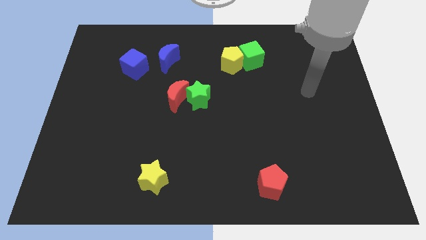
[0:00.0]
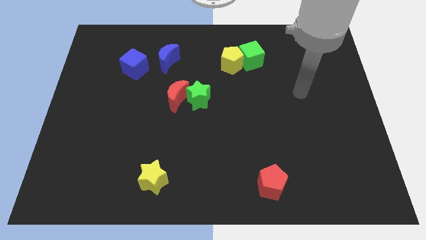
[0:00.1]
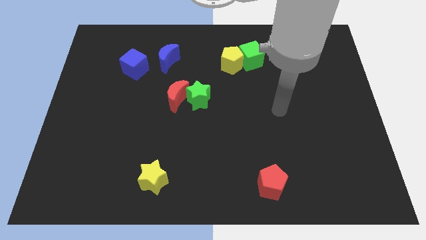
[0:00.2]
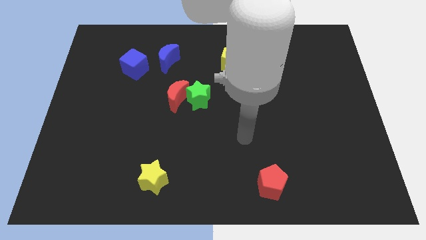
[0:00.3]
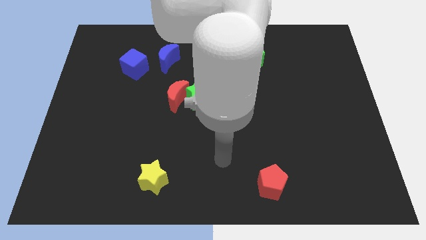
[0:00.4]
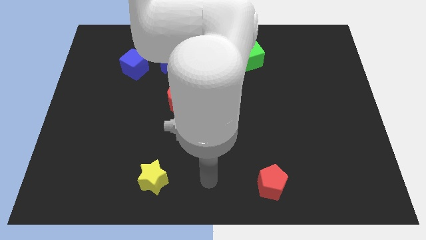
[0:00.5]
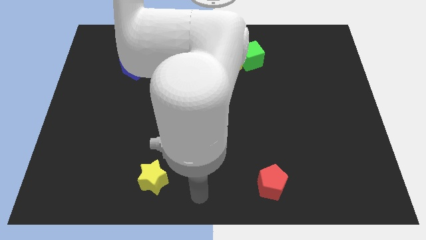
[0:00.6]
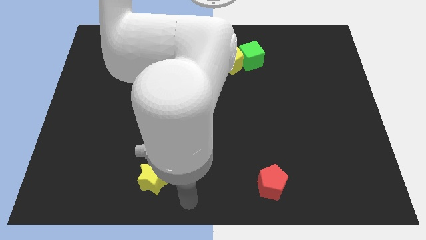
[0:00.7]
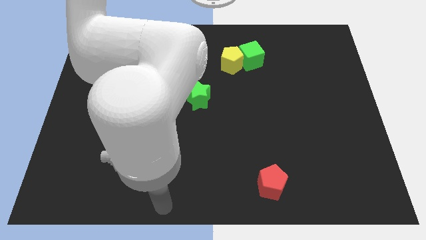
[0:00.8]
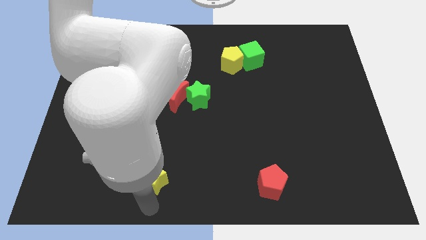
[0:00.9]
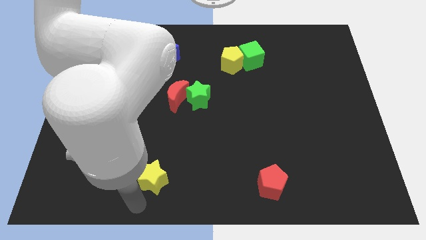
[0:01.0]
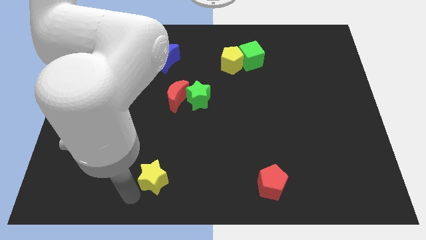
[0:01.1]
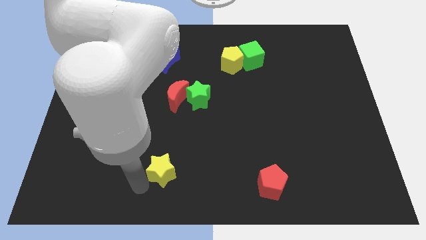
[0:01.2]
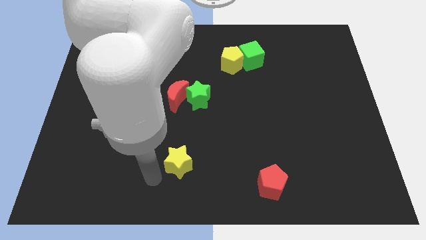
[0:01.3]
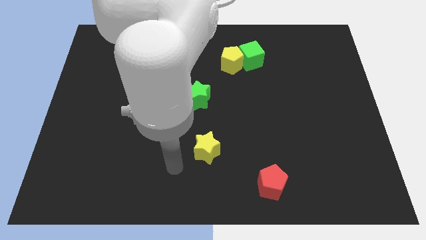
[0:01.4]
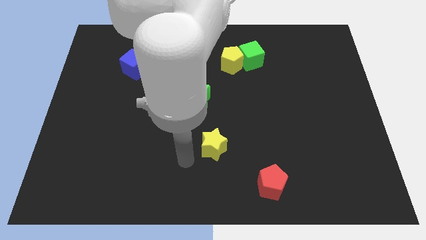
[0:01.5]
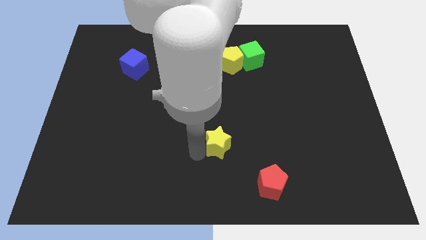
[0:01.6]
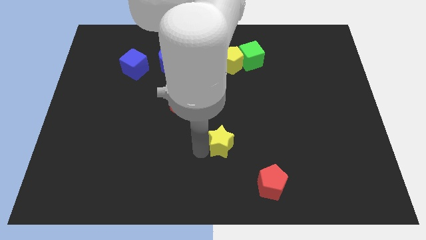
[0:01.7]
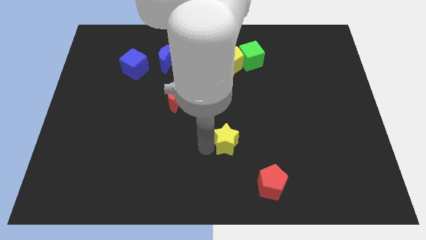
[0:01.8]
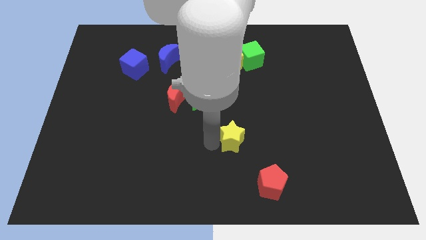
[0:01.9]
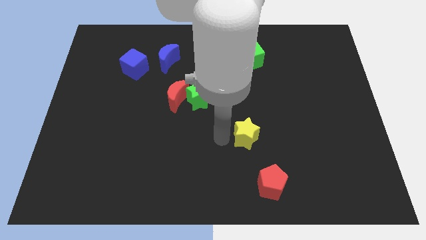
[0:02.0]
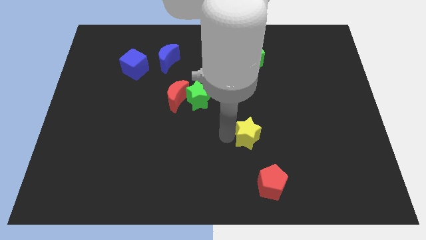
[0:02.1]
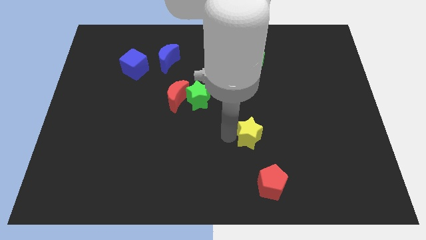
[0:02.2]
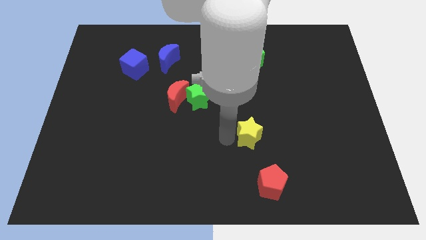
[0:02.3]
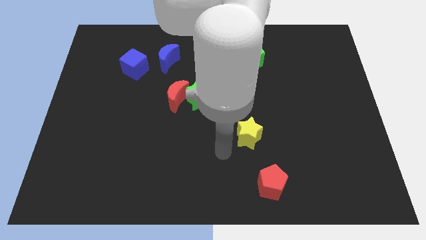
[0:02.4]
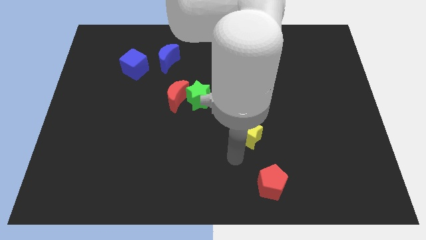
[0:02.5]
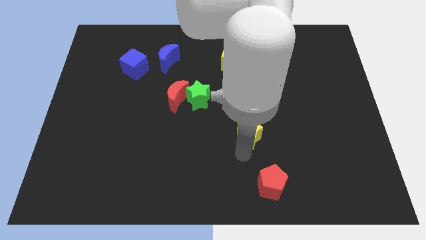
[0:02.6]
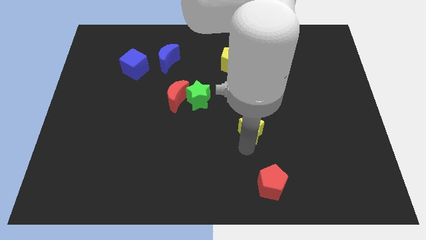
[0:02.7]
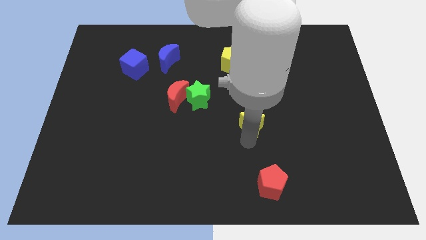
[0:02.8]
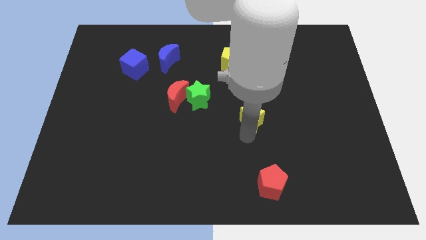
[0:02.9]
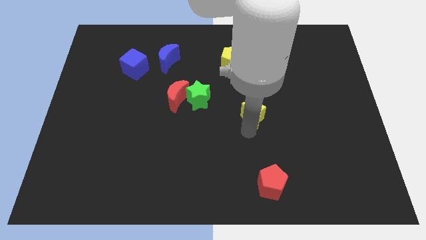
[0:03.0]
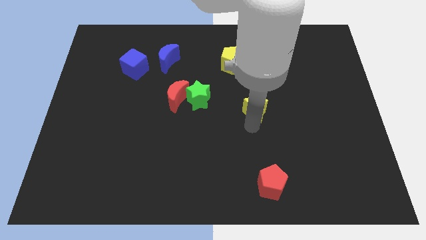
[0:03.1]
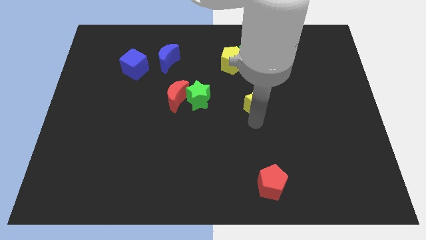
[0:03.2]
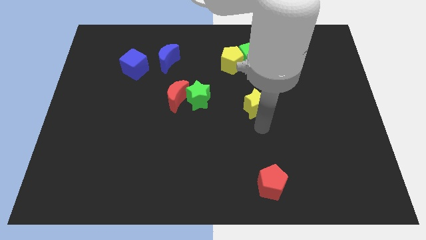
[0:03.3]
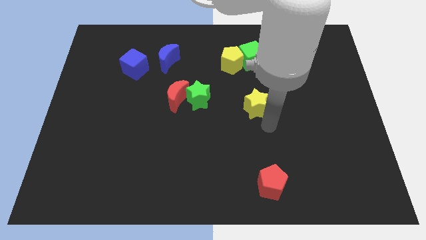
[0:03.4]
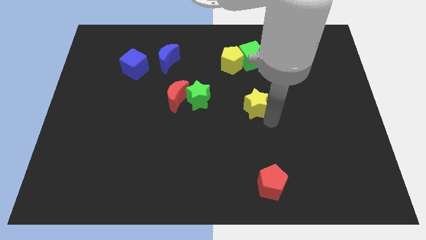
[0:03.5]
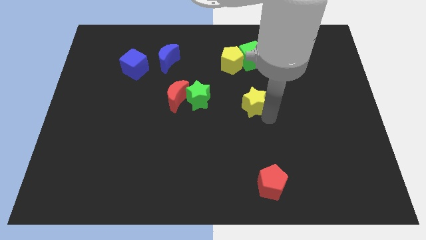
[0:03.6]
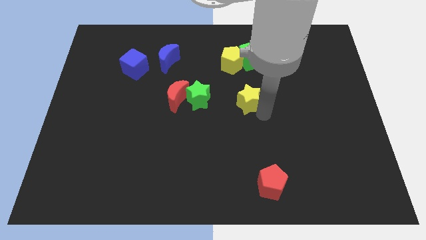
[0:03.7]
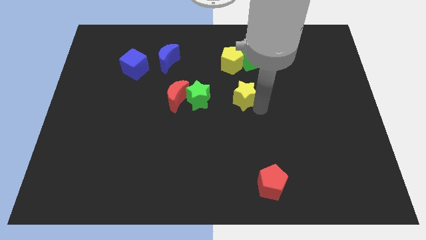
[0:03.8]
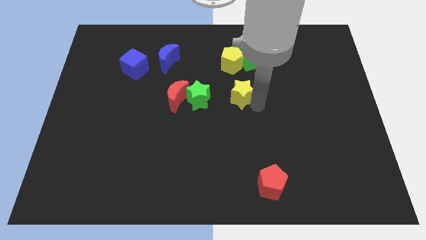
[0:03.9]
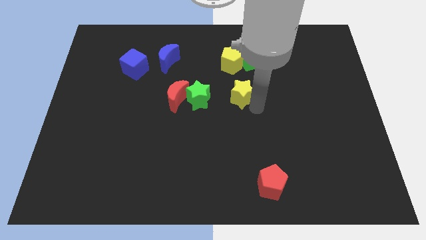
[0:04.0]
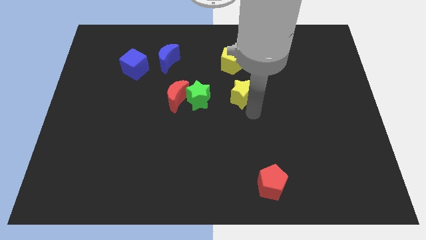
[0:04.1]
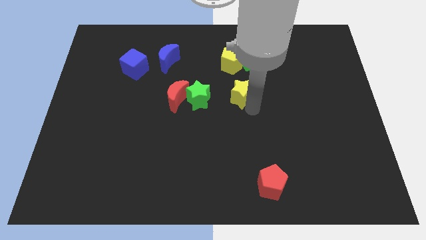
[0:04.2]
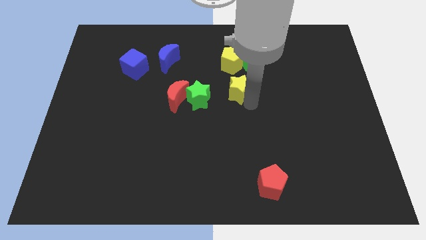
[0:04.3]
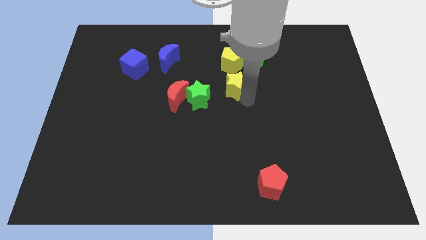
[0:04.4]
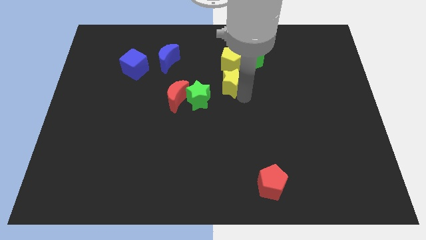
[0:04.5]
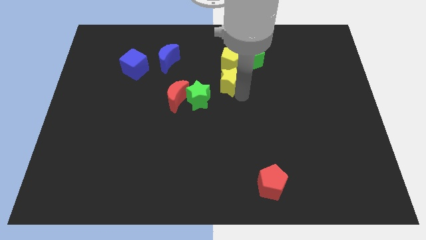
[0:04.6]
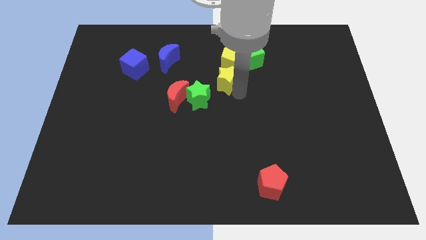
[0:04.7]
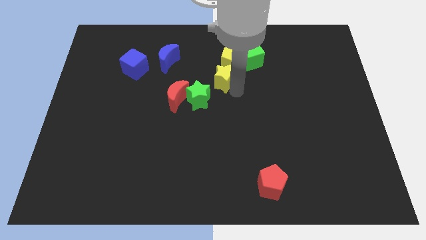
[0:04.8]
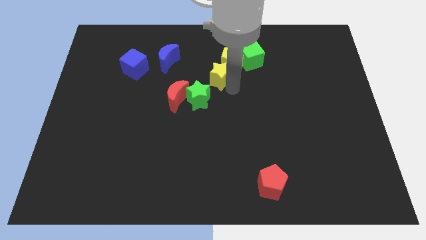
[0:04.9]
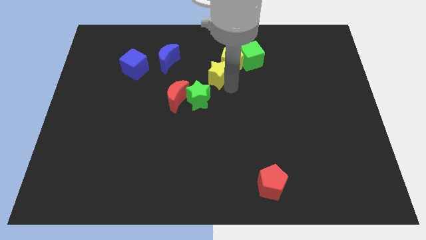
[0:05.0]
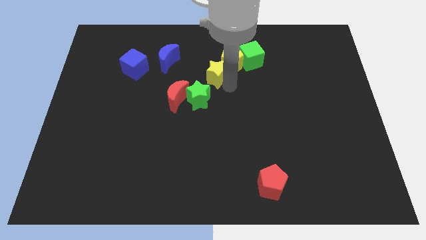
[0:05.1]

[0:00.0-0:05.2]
push the yellow star towards the yellow pentagon

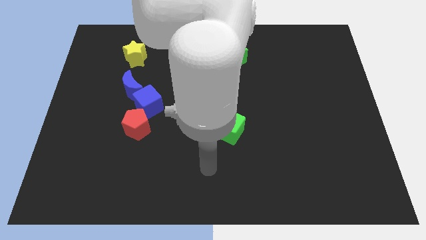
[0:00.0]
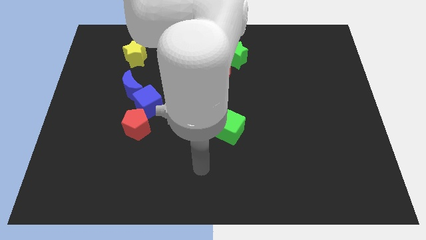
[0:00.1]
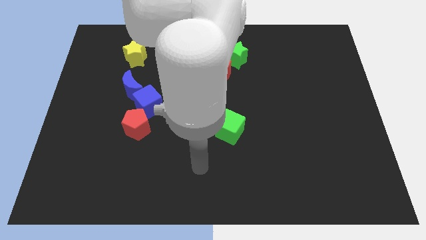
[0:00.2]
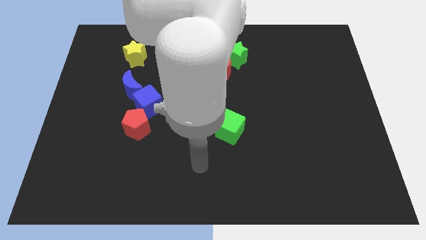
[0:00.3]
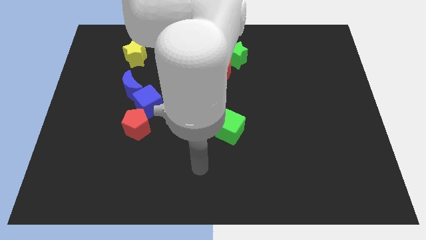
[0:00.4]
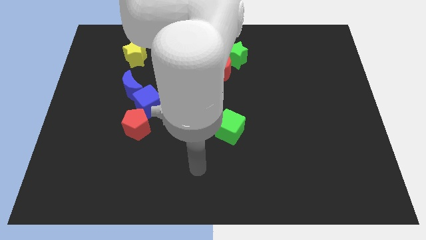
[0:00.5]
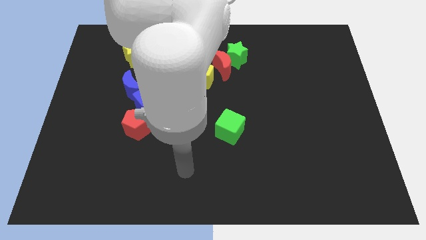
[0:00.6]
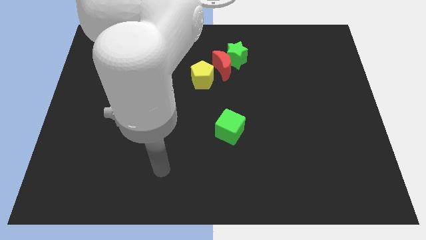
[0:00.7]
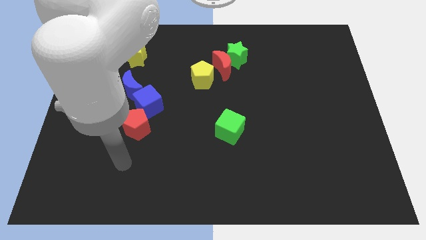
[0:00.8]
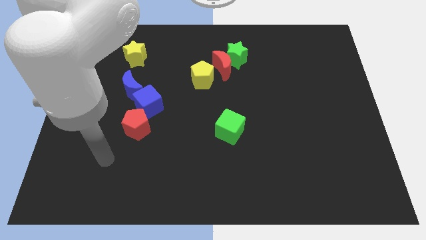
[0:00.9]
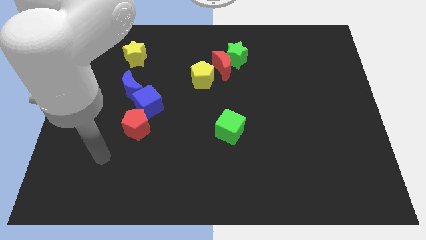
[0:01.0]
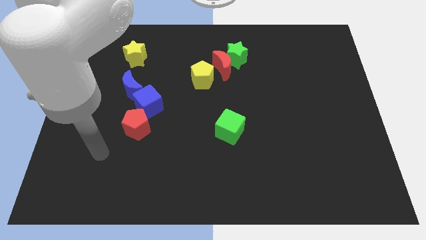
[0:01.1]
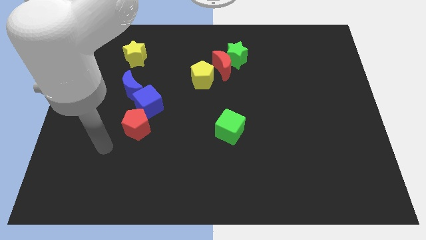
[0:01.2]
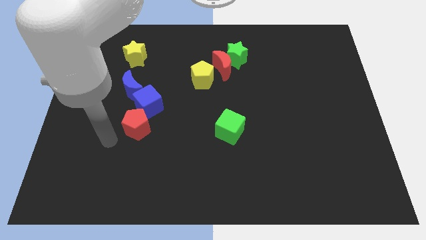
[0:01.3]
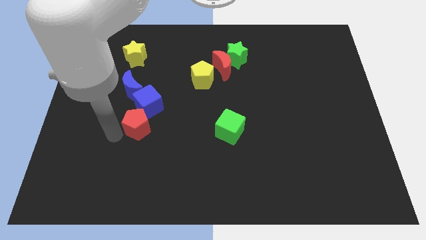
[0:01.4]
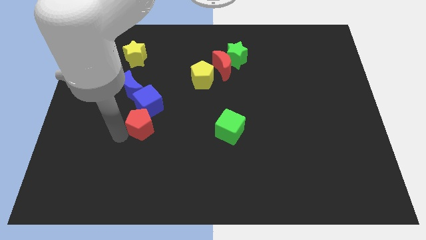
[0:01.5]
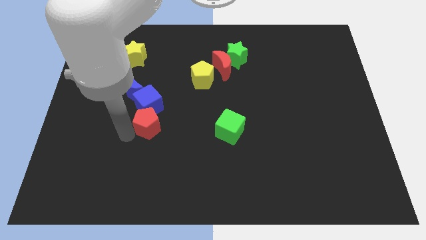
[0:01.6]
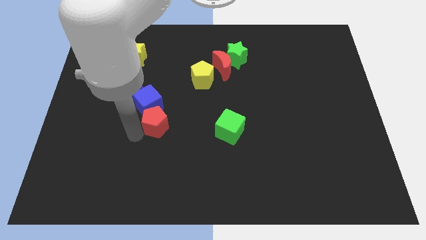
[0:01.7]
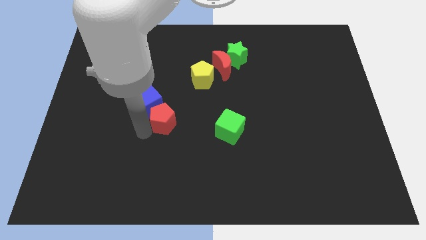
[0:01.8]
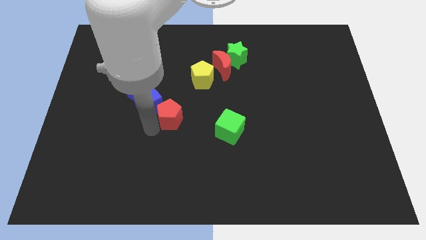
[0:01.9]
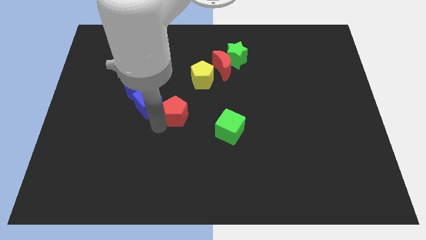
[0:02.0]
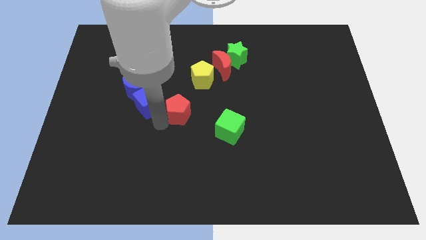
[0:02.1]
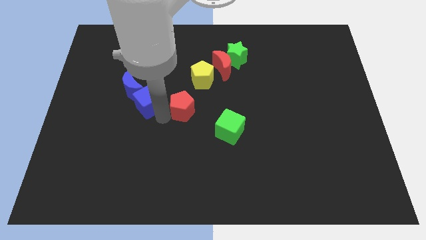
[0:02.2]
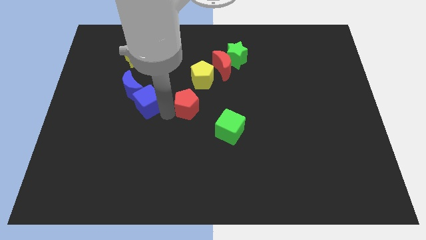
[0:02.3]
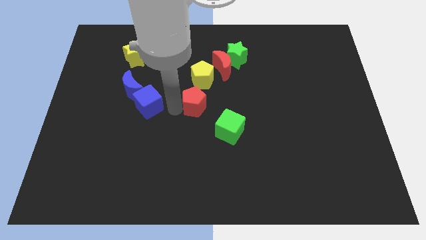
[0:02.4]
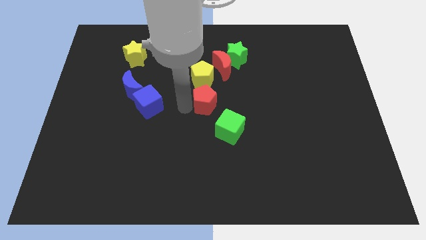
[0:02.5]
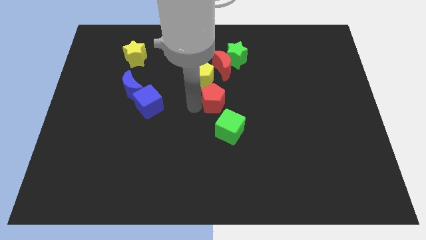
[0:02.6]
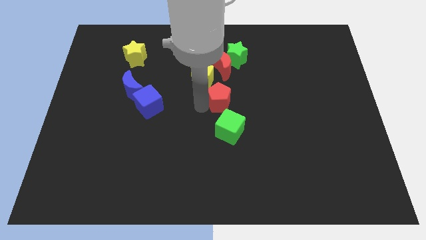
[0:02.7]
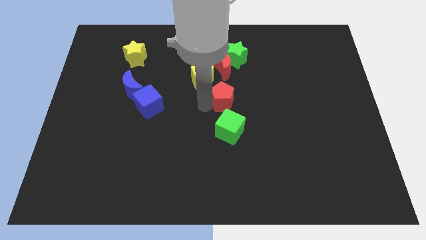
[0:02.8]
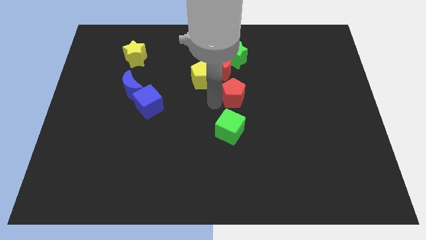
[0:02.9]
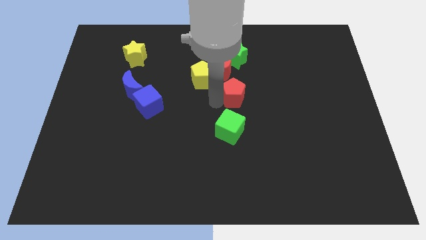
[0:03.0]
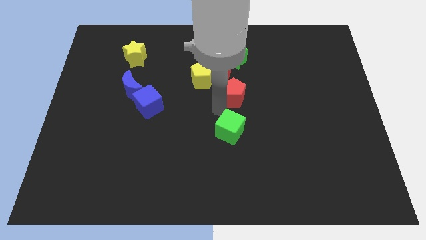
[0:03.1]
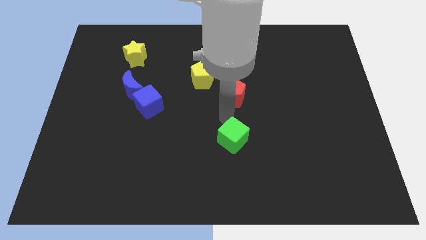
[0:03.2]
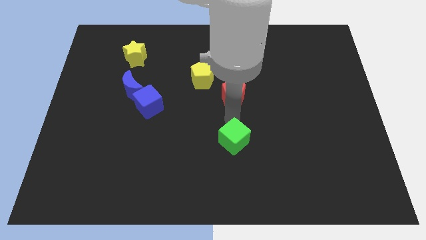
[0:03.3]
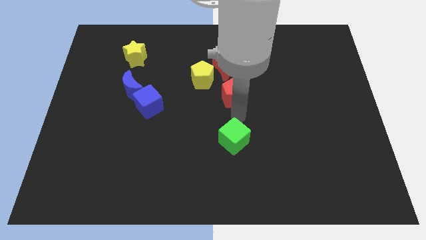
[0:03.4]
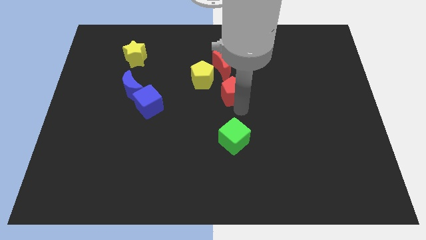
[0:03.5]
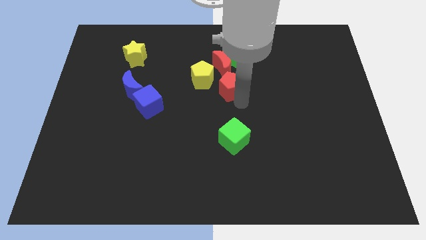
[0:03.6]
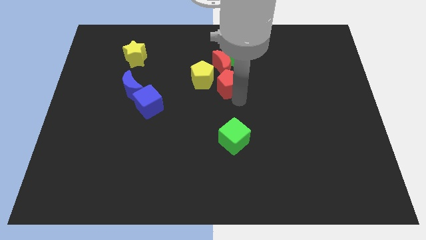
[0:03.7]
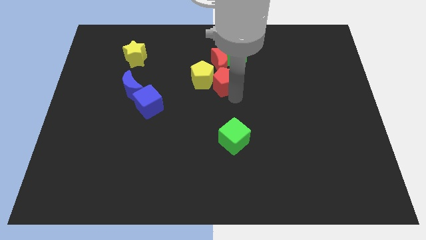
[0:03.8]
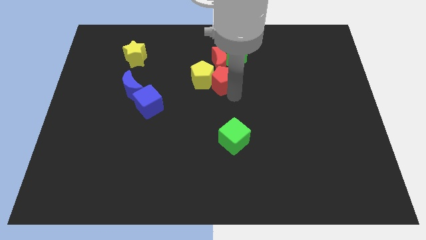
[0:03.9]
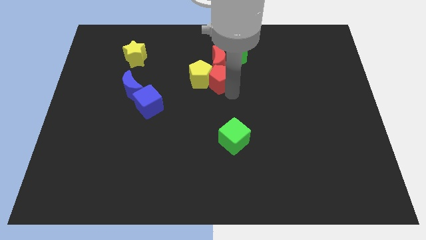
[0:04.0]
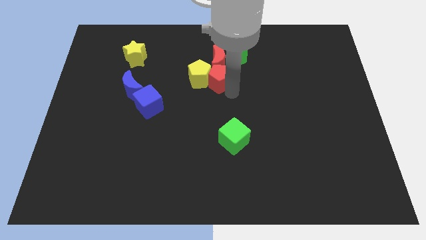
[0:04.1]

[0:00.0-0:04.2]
slide the red pentagon towards the red moon
